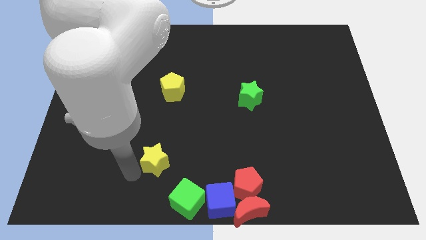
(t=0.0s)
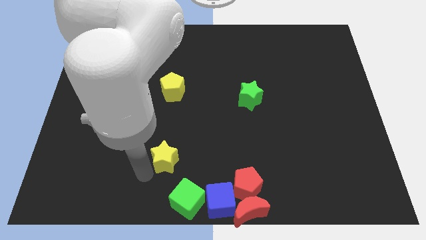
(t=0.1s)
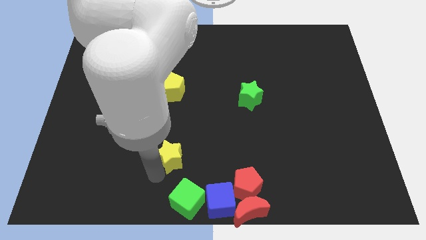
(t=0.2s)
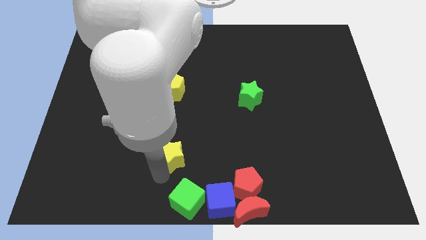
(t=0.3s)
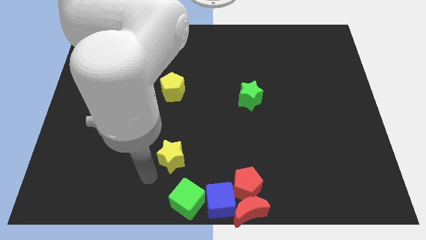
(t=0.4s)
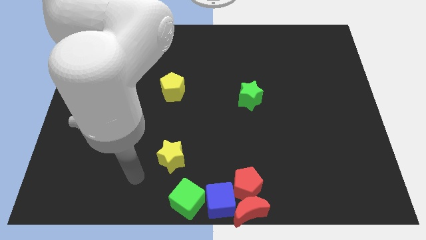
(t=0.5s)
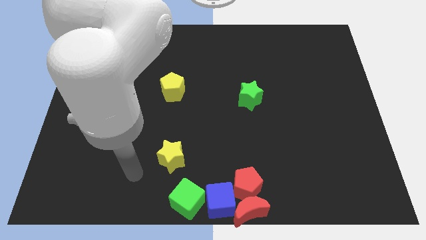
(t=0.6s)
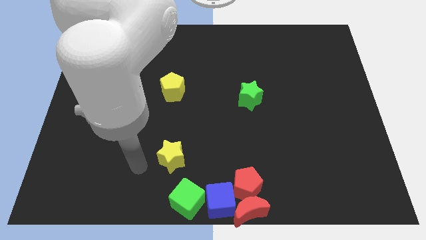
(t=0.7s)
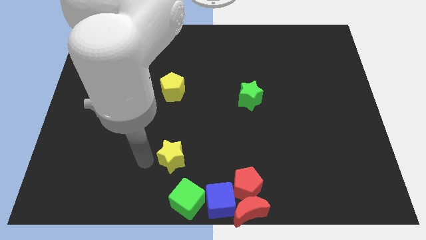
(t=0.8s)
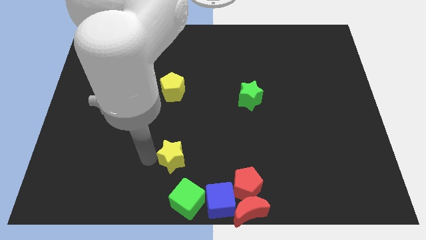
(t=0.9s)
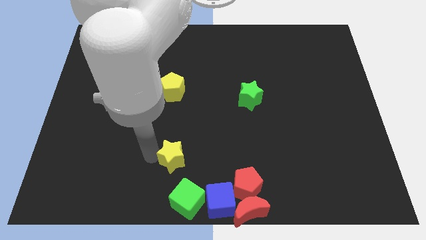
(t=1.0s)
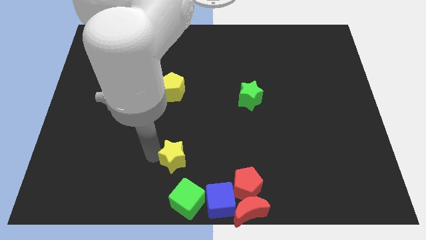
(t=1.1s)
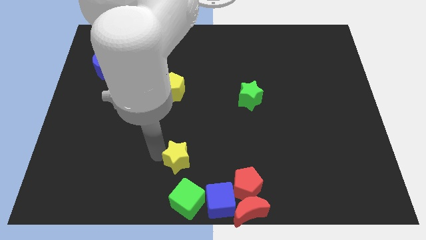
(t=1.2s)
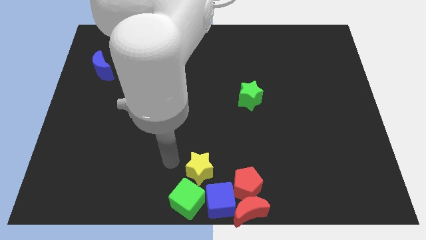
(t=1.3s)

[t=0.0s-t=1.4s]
place yellow star above green cube

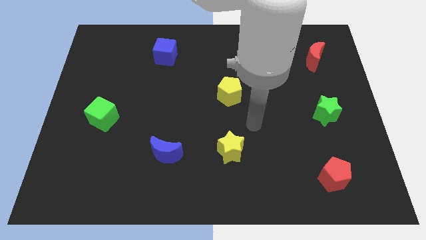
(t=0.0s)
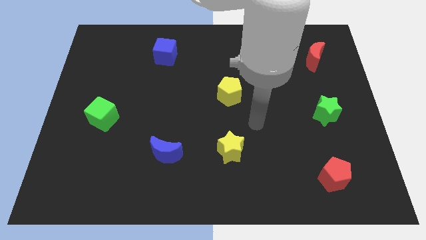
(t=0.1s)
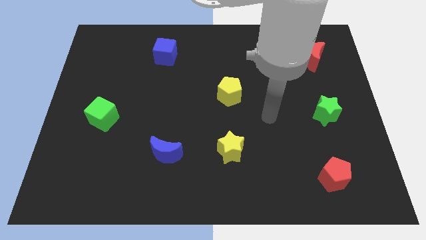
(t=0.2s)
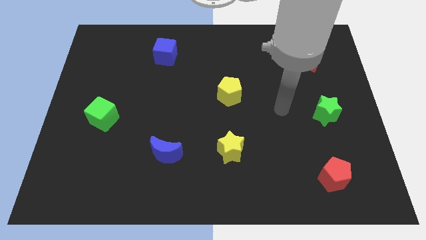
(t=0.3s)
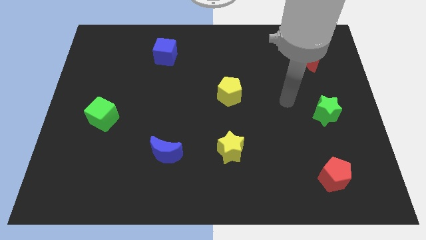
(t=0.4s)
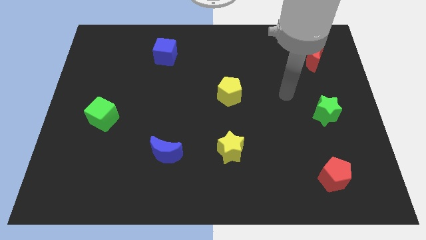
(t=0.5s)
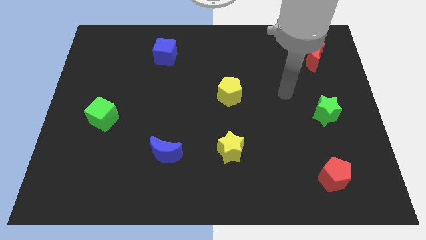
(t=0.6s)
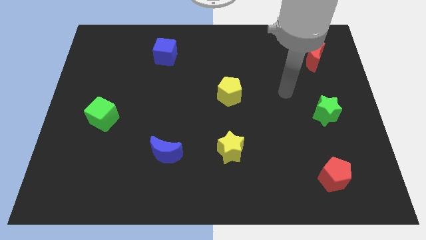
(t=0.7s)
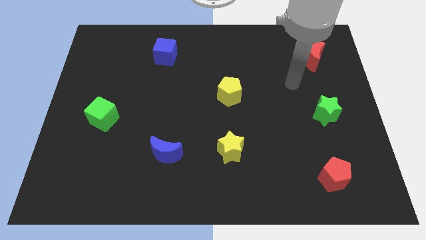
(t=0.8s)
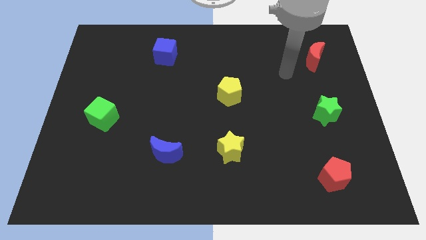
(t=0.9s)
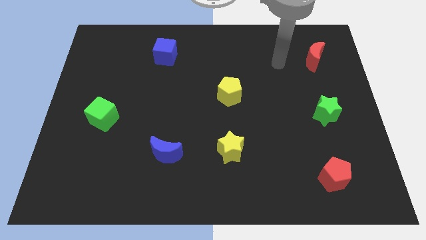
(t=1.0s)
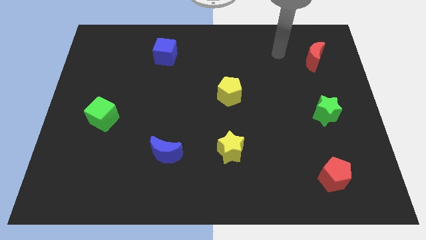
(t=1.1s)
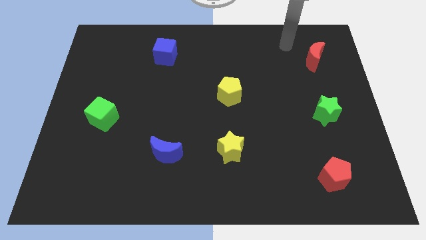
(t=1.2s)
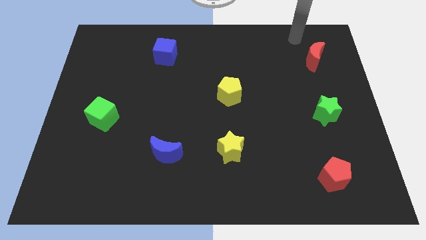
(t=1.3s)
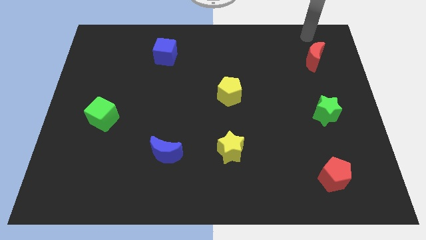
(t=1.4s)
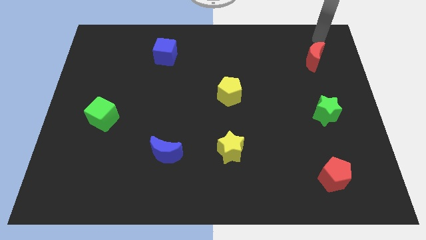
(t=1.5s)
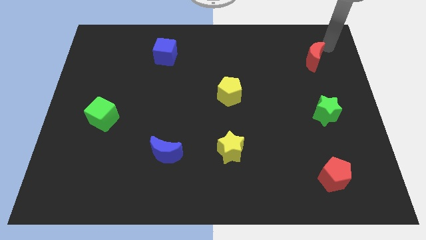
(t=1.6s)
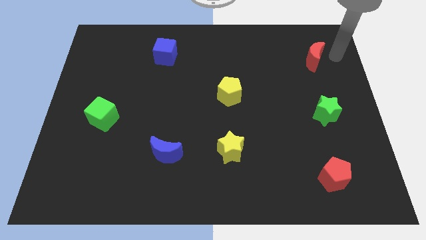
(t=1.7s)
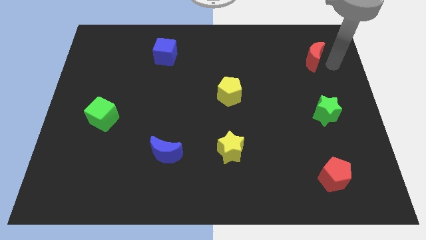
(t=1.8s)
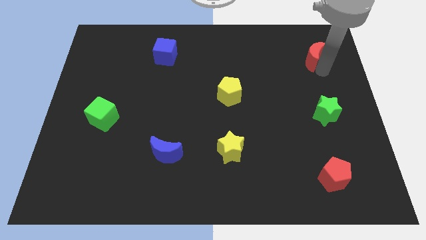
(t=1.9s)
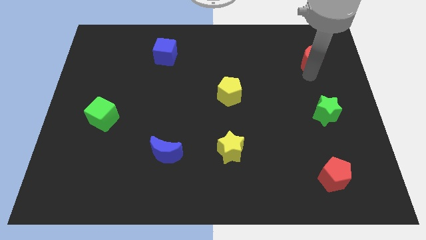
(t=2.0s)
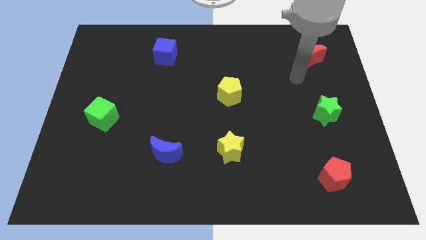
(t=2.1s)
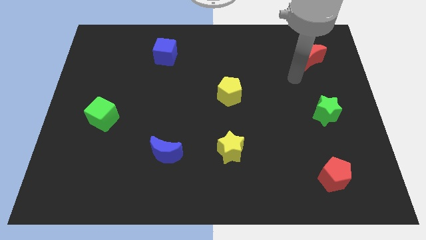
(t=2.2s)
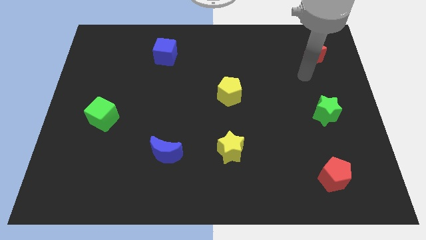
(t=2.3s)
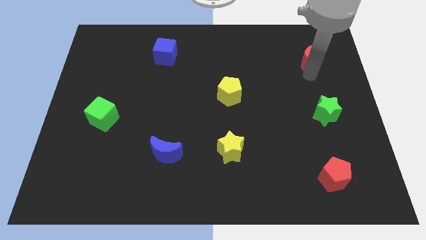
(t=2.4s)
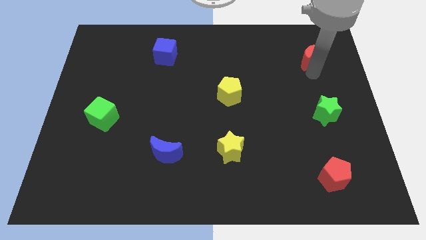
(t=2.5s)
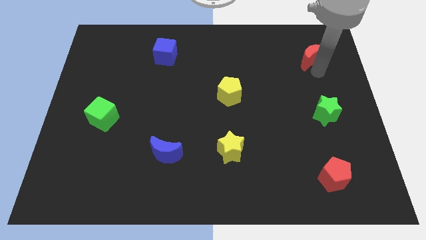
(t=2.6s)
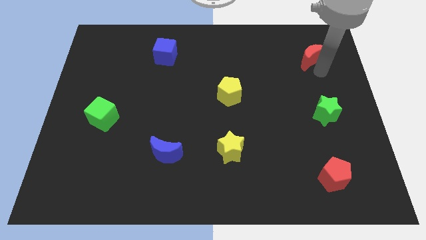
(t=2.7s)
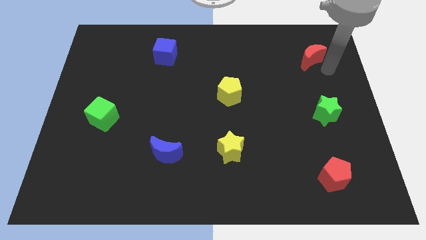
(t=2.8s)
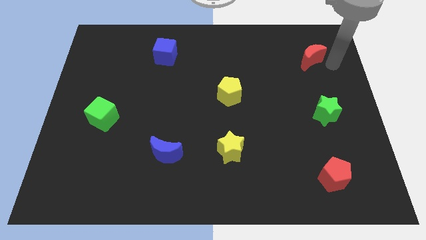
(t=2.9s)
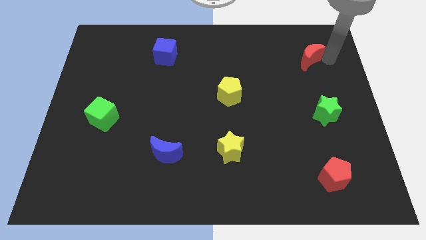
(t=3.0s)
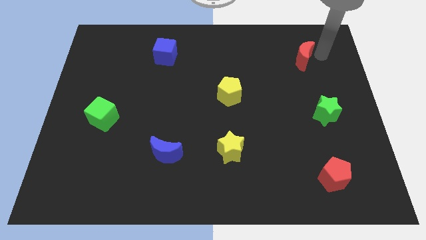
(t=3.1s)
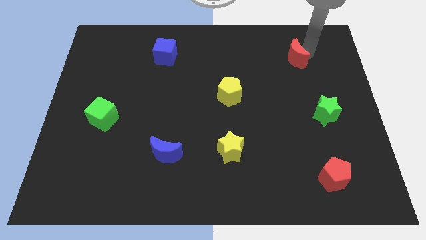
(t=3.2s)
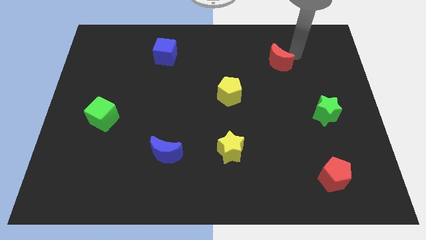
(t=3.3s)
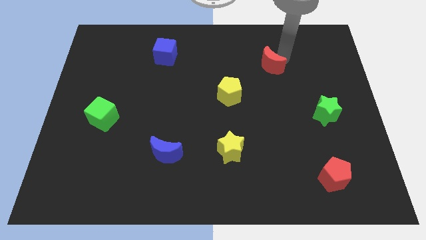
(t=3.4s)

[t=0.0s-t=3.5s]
slide the red crescent diagonally top left to the green star

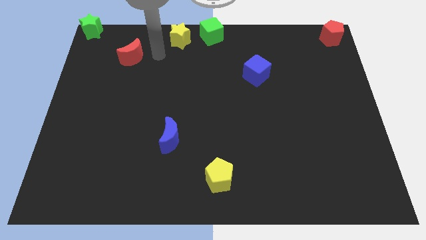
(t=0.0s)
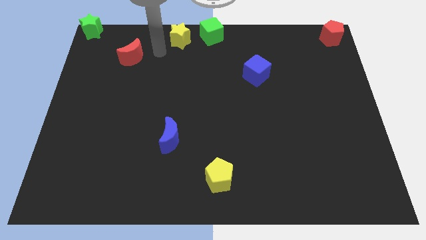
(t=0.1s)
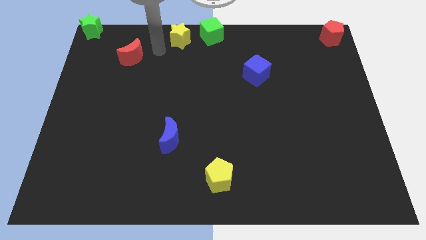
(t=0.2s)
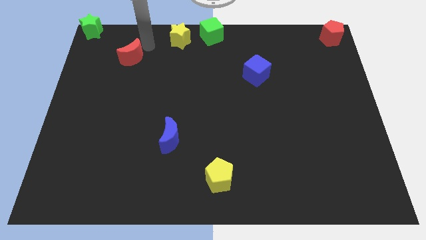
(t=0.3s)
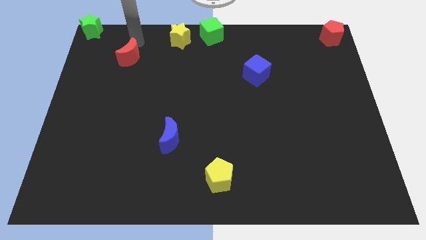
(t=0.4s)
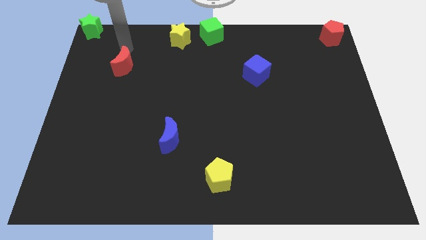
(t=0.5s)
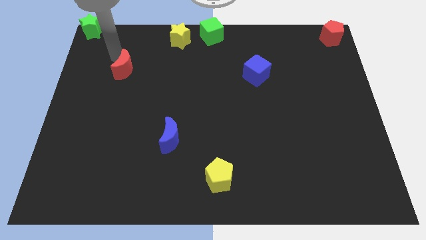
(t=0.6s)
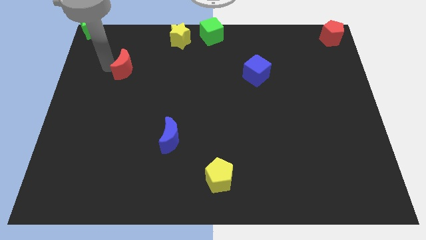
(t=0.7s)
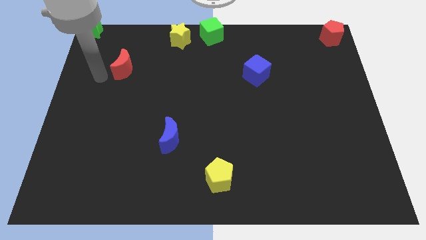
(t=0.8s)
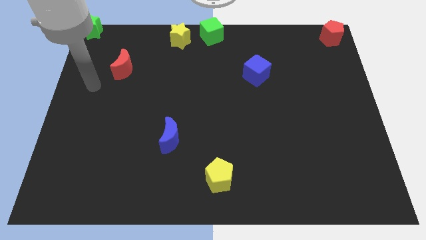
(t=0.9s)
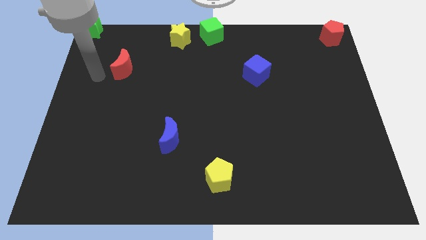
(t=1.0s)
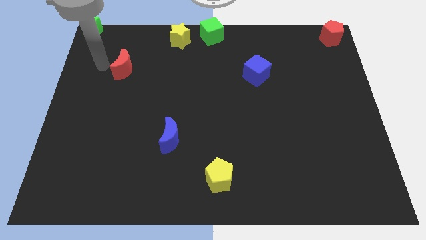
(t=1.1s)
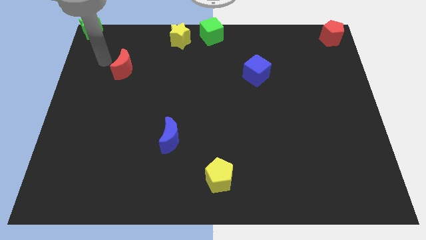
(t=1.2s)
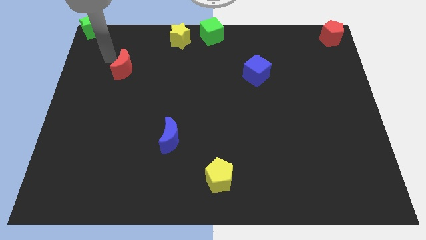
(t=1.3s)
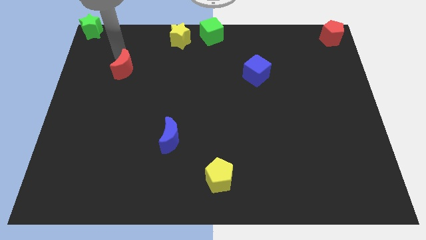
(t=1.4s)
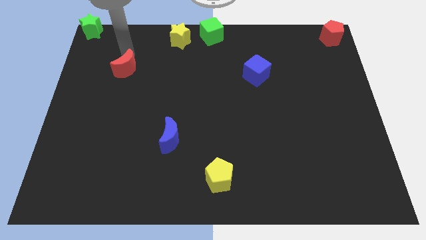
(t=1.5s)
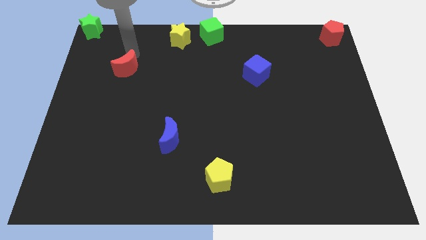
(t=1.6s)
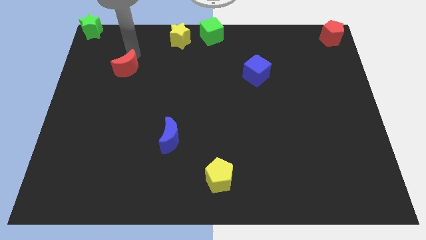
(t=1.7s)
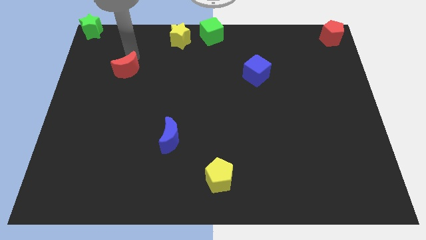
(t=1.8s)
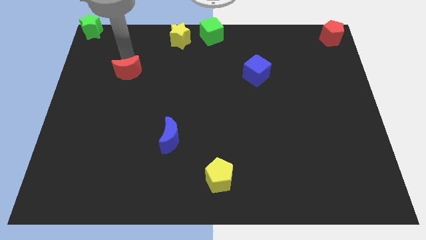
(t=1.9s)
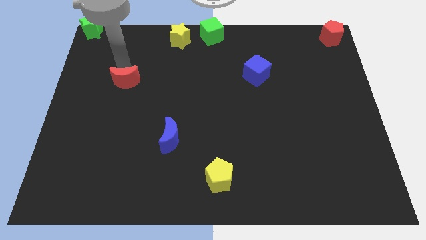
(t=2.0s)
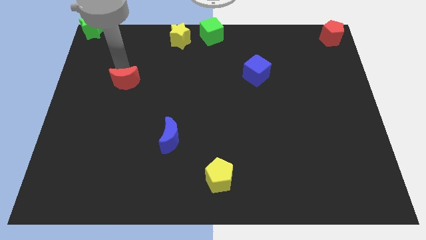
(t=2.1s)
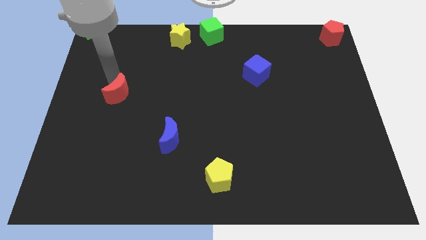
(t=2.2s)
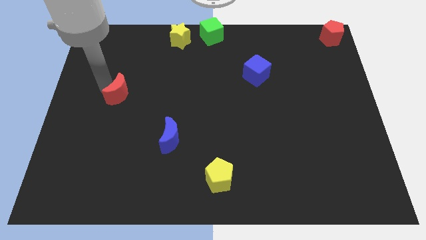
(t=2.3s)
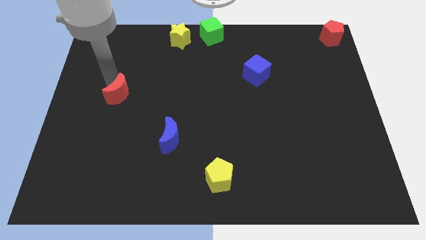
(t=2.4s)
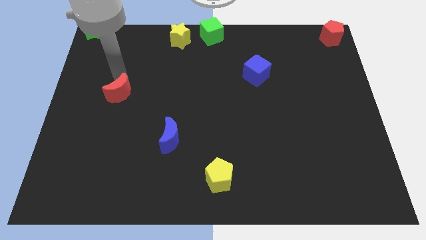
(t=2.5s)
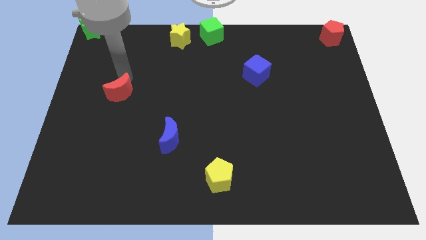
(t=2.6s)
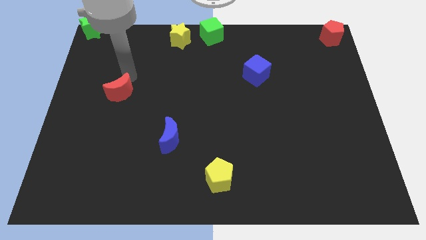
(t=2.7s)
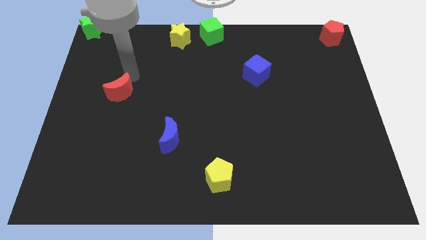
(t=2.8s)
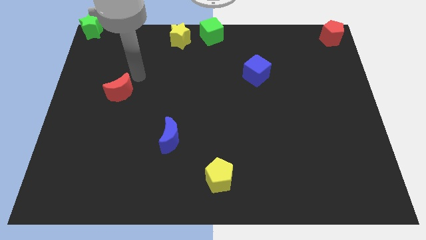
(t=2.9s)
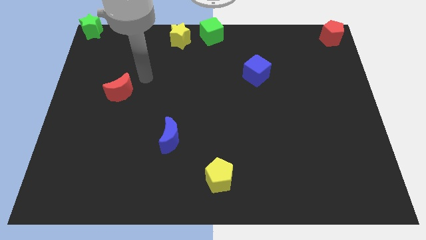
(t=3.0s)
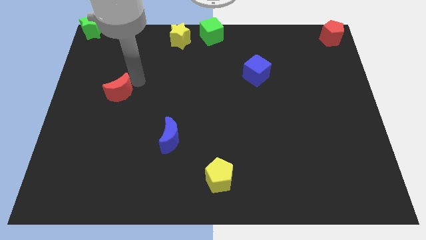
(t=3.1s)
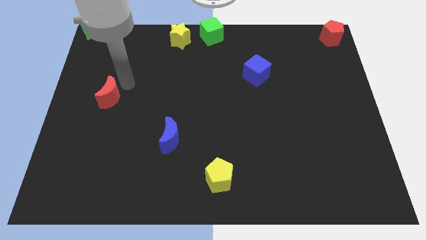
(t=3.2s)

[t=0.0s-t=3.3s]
move the red moon towards the center left of the board

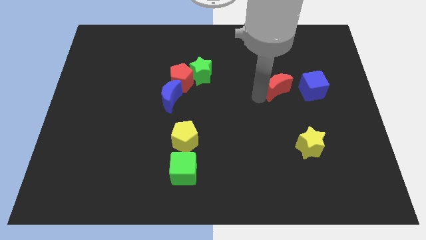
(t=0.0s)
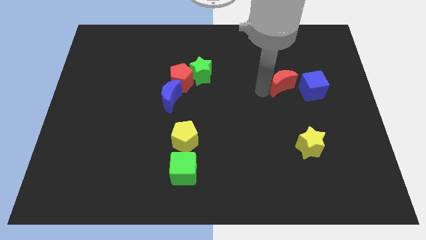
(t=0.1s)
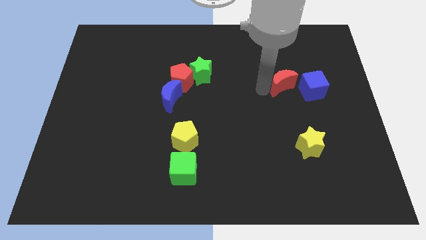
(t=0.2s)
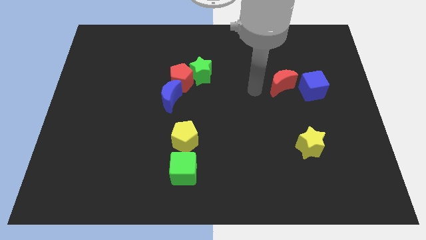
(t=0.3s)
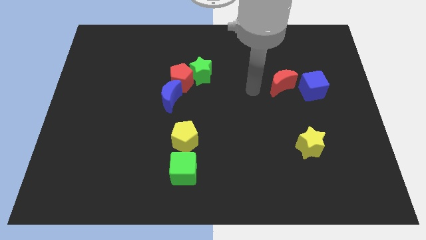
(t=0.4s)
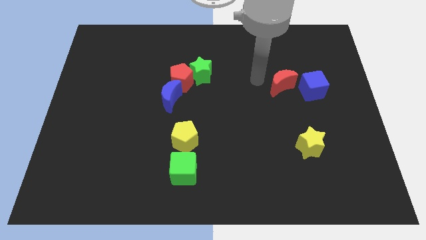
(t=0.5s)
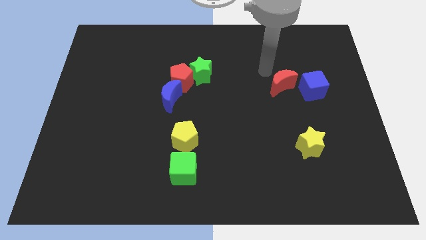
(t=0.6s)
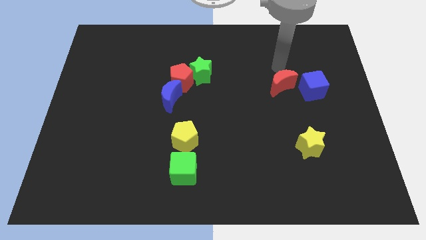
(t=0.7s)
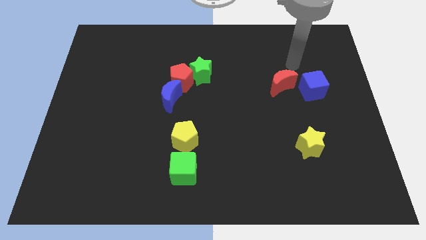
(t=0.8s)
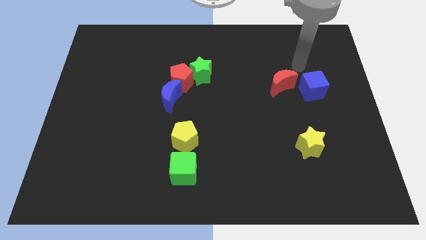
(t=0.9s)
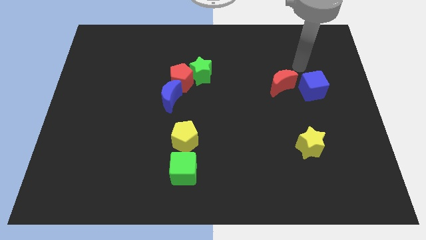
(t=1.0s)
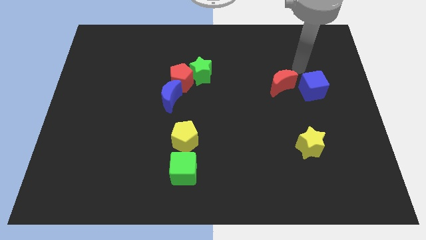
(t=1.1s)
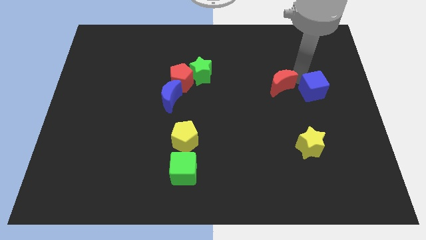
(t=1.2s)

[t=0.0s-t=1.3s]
slightly move the red moon towards the top
